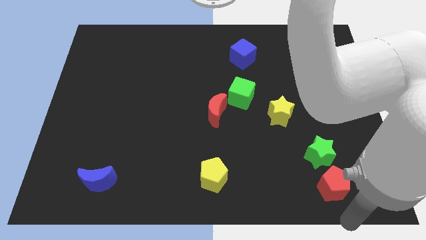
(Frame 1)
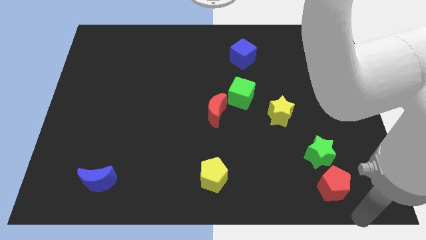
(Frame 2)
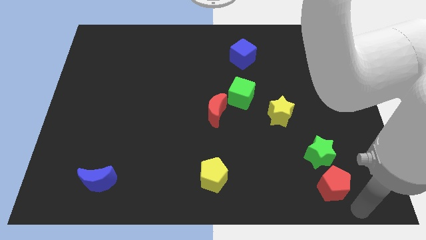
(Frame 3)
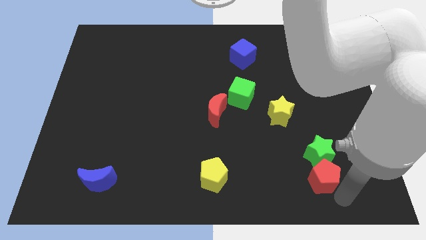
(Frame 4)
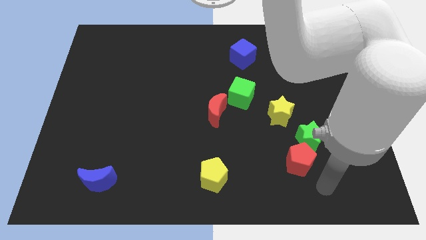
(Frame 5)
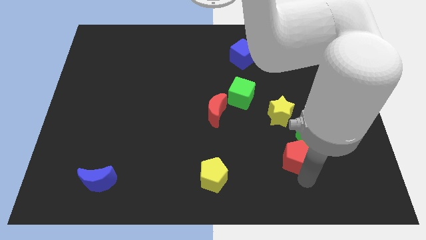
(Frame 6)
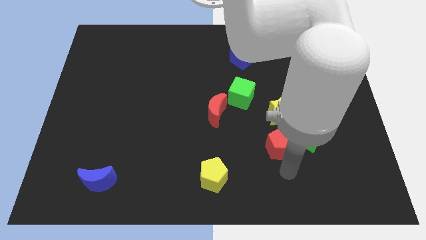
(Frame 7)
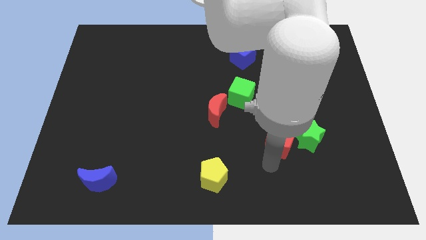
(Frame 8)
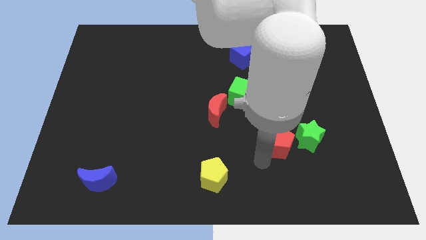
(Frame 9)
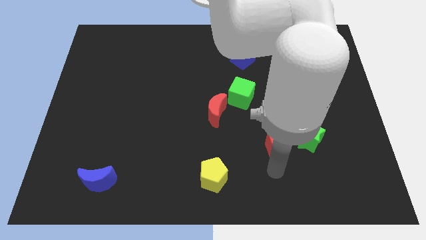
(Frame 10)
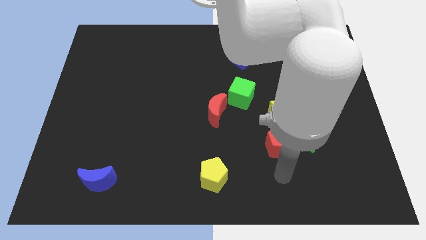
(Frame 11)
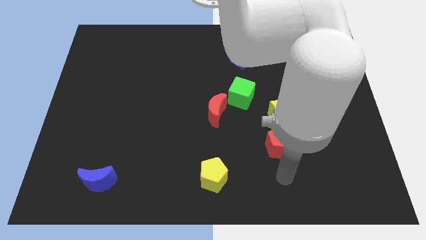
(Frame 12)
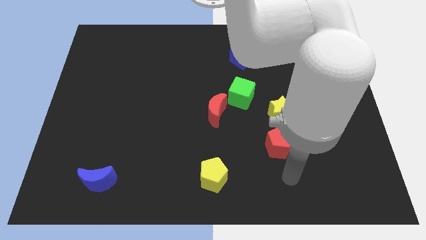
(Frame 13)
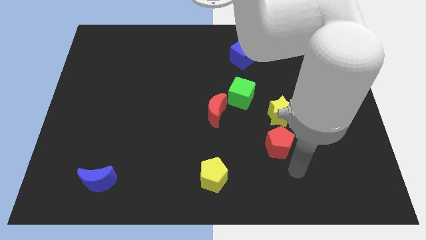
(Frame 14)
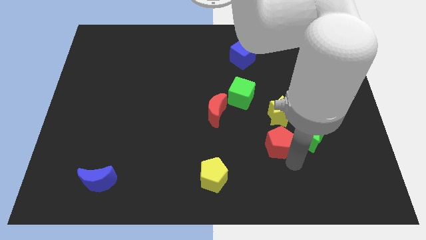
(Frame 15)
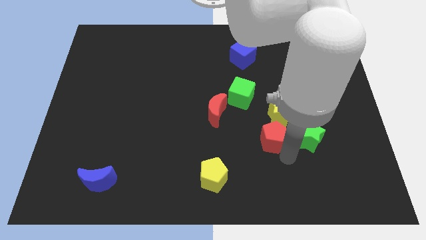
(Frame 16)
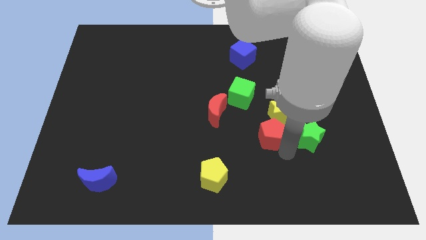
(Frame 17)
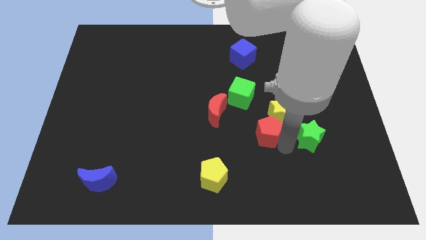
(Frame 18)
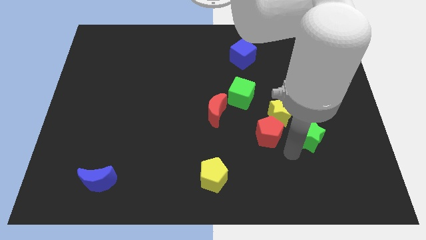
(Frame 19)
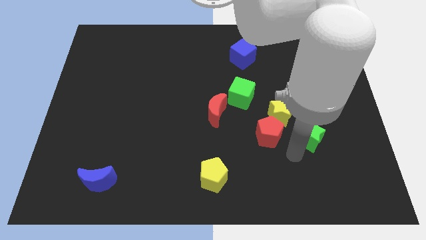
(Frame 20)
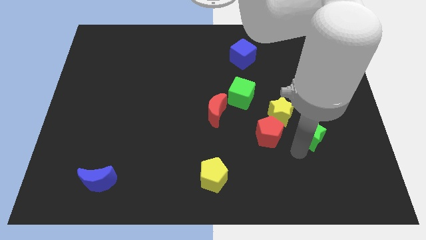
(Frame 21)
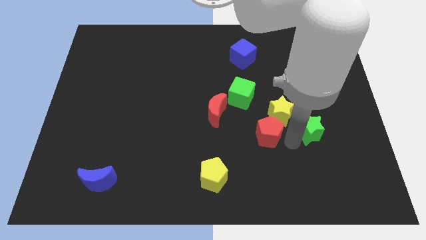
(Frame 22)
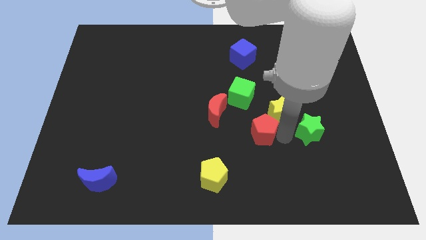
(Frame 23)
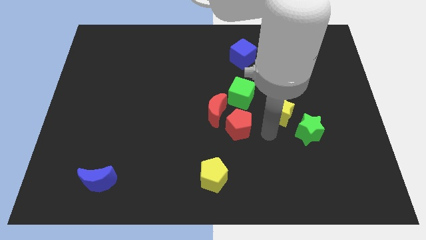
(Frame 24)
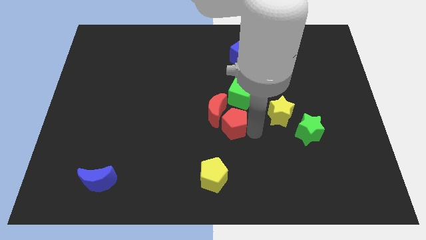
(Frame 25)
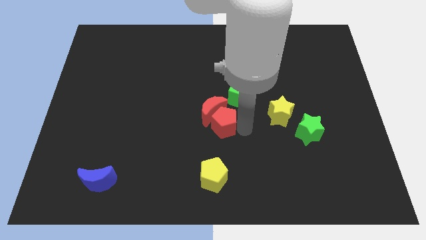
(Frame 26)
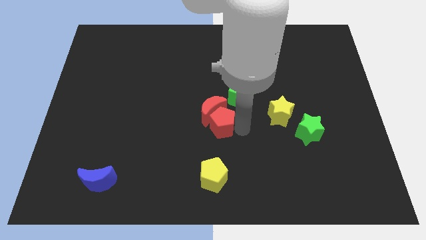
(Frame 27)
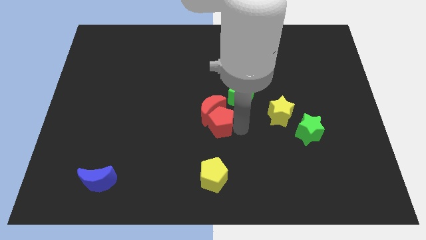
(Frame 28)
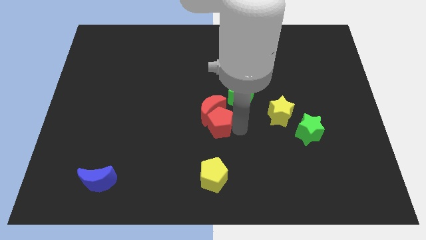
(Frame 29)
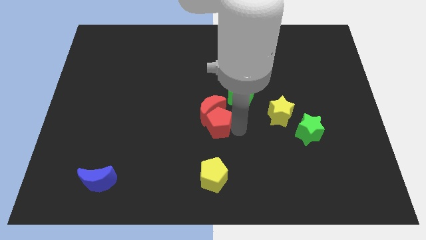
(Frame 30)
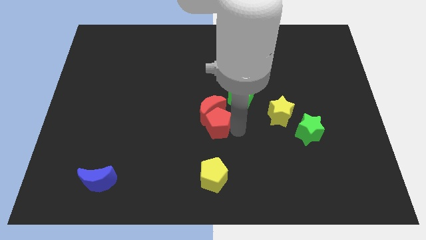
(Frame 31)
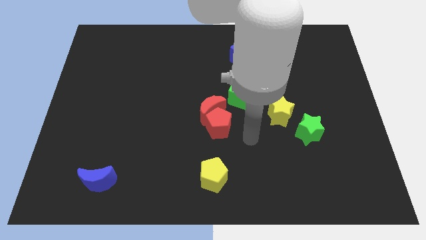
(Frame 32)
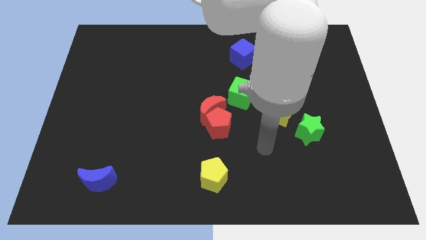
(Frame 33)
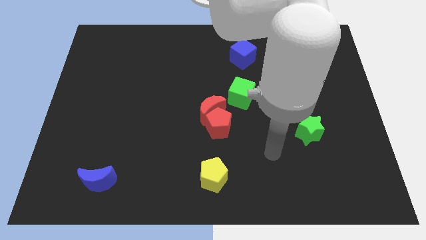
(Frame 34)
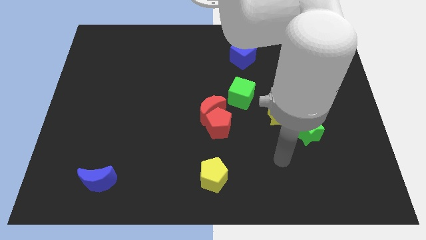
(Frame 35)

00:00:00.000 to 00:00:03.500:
push the red pentagon into the red moon

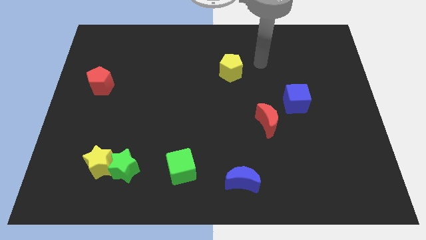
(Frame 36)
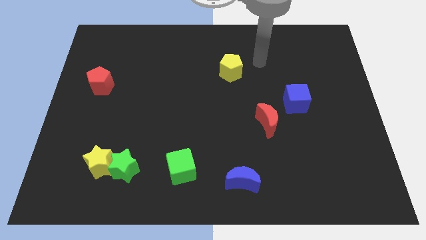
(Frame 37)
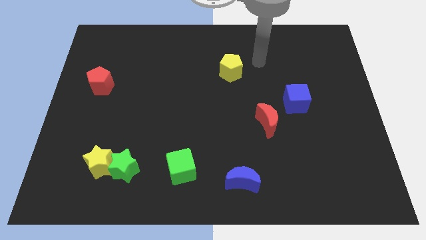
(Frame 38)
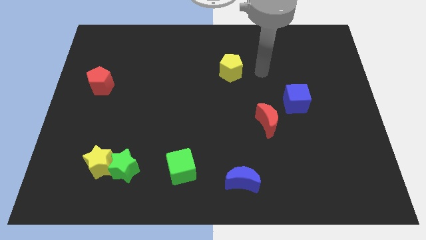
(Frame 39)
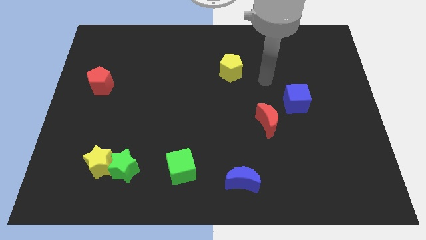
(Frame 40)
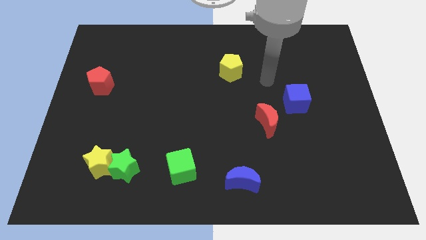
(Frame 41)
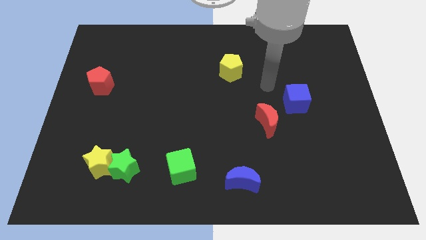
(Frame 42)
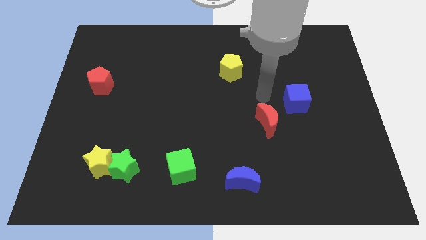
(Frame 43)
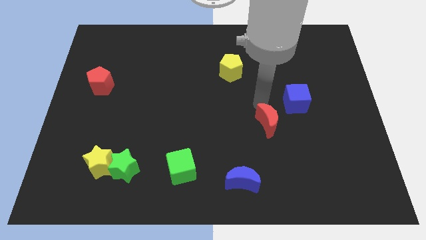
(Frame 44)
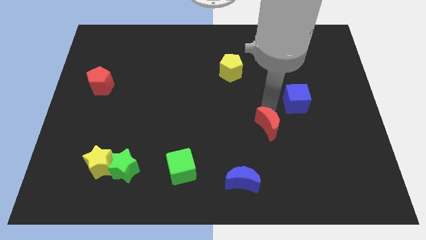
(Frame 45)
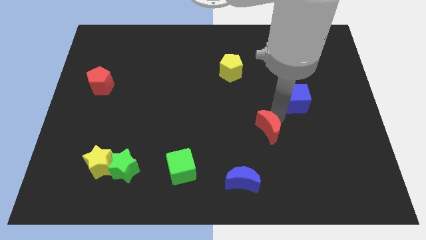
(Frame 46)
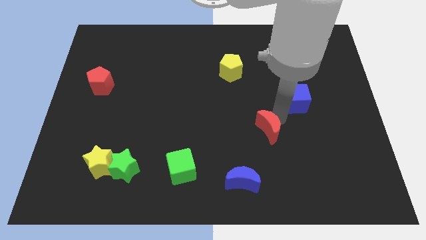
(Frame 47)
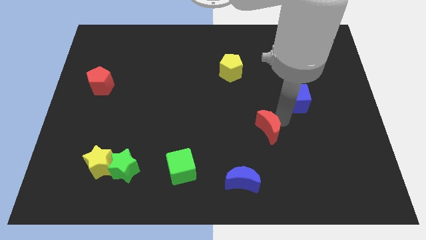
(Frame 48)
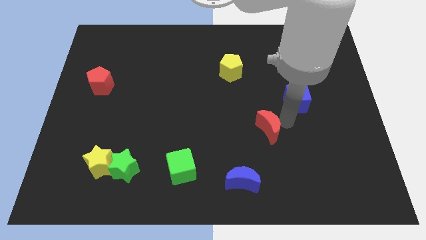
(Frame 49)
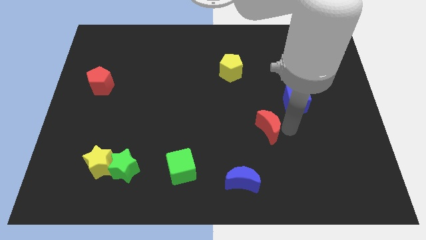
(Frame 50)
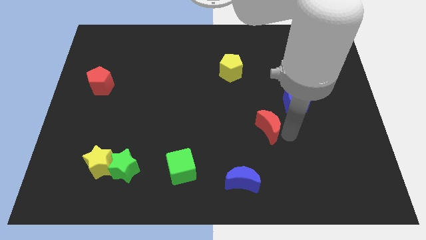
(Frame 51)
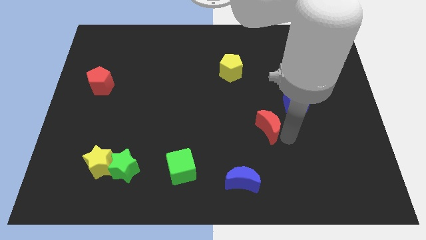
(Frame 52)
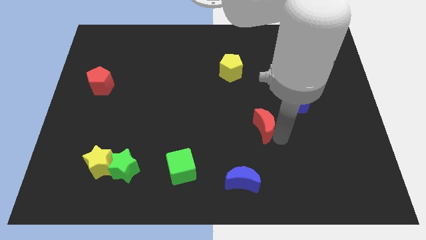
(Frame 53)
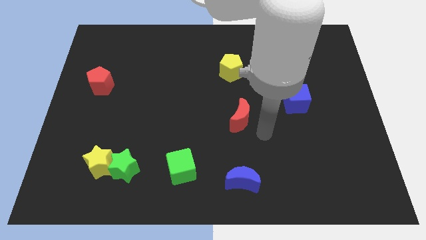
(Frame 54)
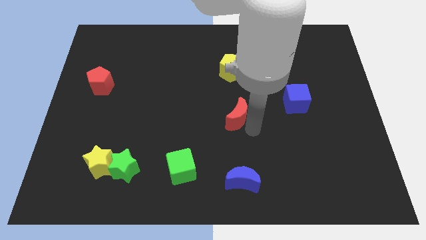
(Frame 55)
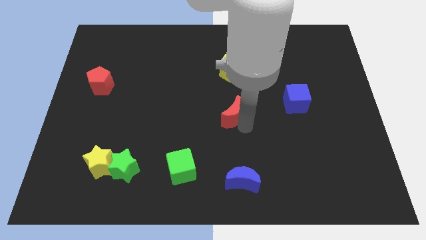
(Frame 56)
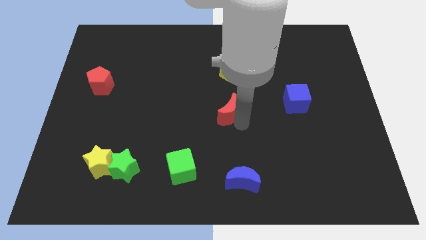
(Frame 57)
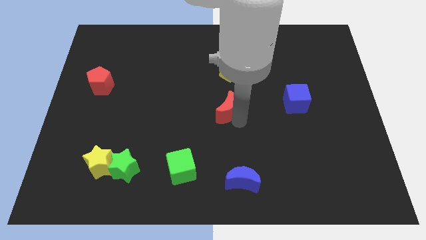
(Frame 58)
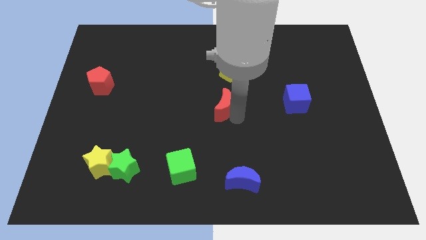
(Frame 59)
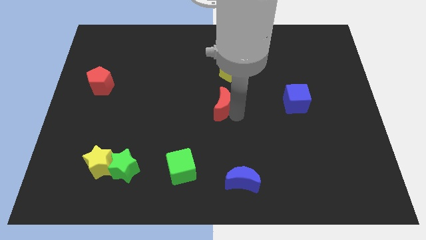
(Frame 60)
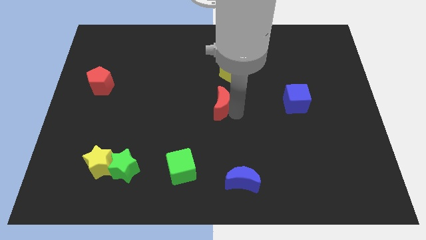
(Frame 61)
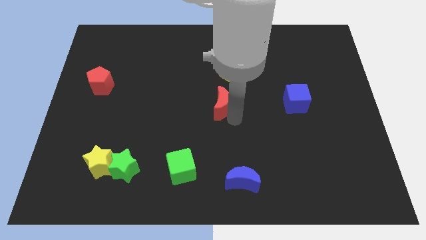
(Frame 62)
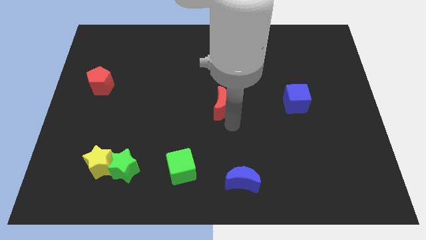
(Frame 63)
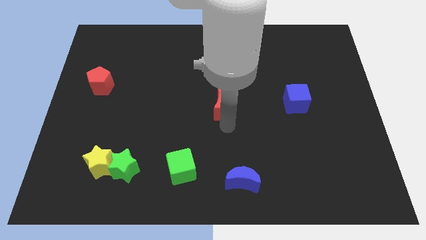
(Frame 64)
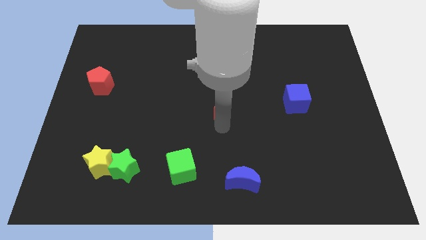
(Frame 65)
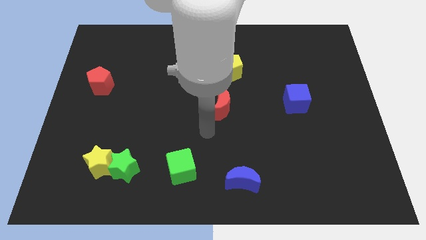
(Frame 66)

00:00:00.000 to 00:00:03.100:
place the red crescent below to the yellow pentagon

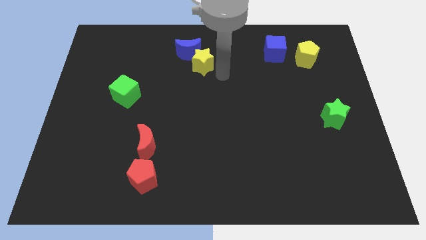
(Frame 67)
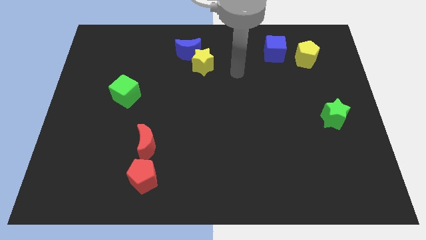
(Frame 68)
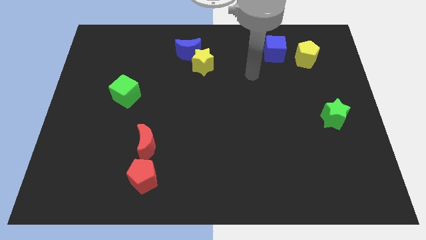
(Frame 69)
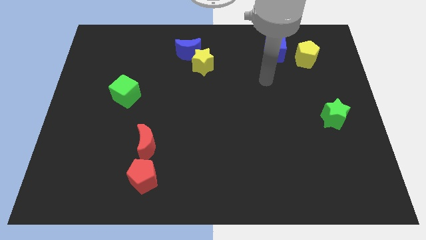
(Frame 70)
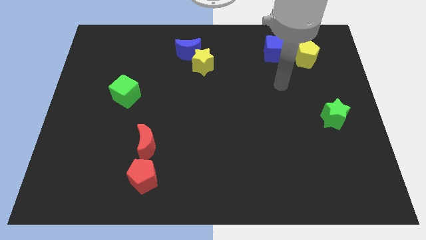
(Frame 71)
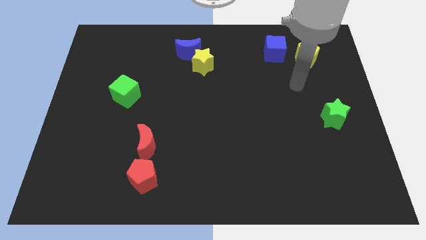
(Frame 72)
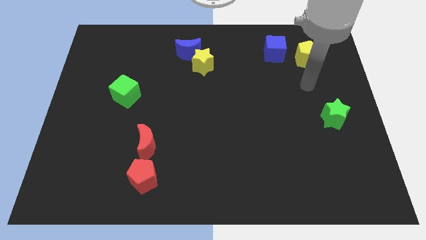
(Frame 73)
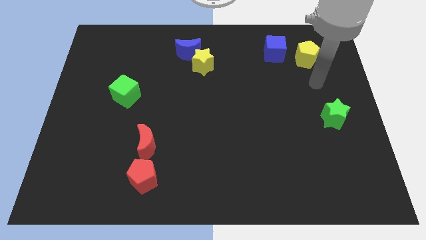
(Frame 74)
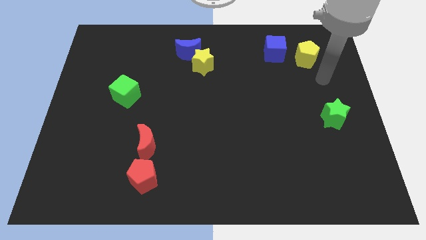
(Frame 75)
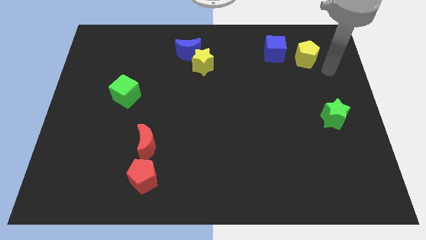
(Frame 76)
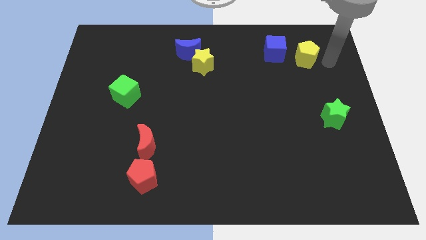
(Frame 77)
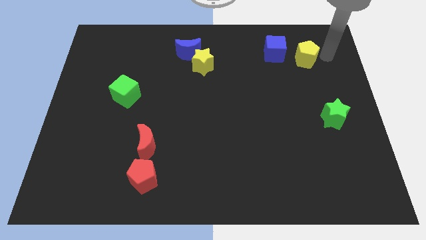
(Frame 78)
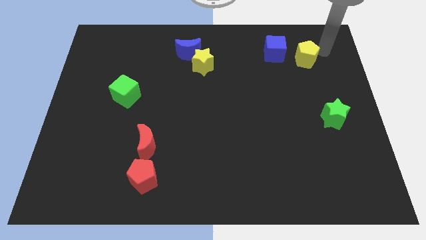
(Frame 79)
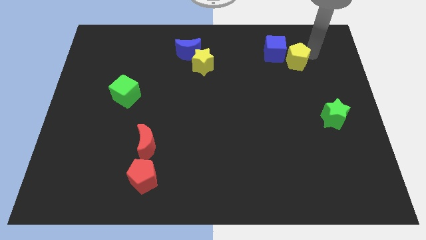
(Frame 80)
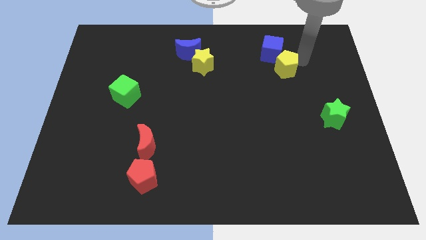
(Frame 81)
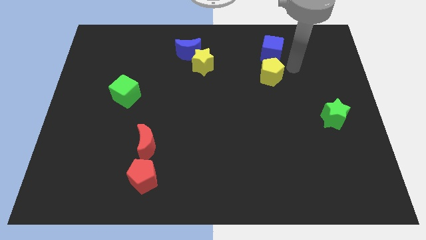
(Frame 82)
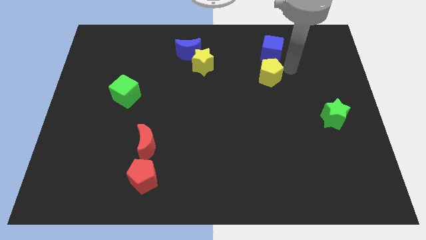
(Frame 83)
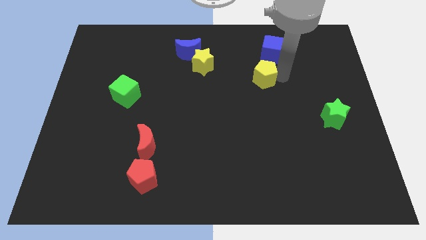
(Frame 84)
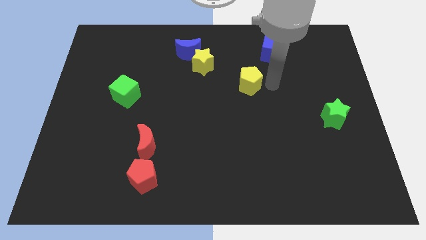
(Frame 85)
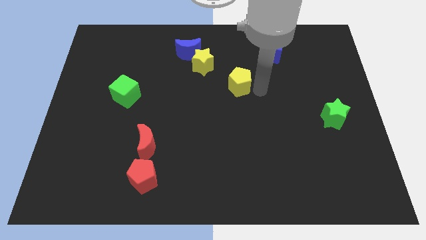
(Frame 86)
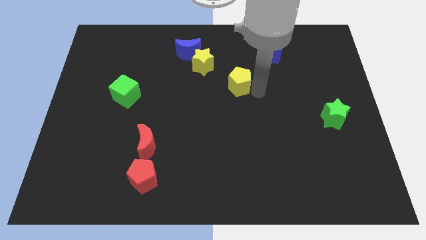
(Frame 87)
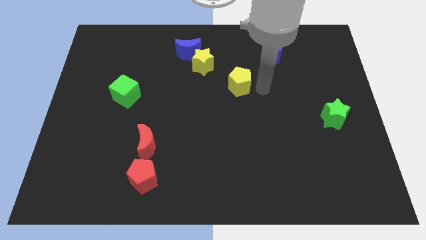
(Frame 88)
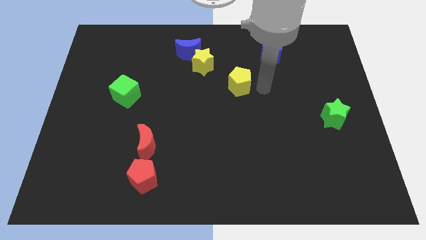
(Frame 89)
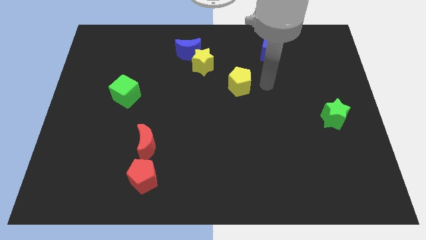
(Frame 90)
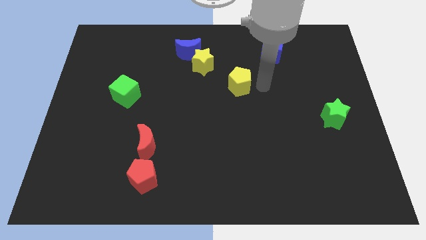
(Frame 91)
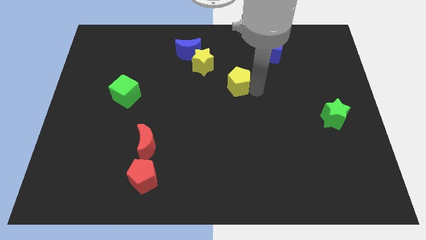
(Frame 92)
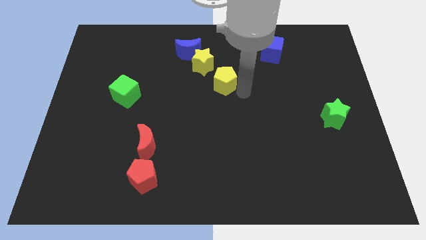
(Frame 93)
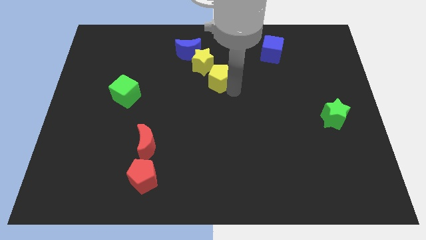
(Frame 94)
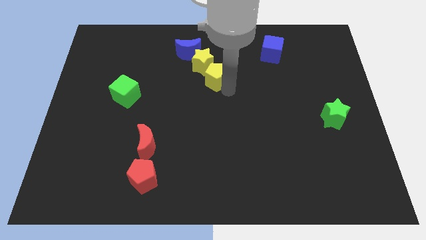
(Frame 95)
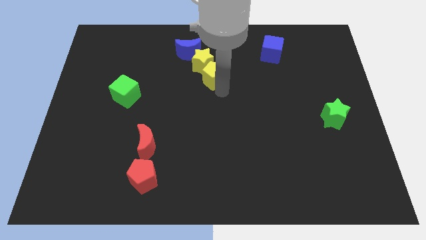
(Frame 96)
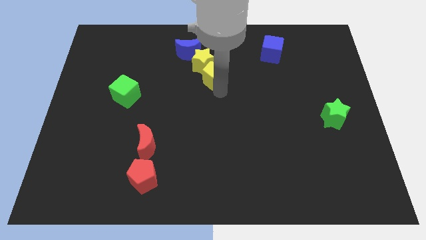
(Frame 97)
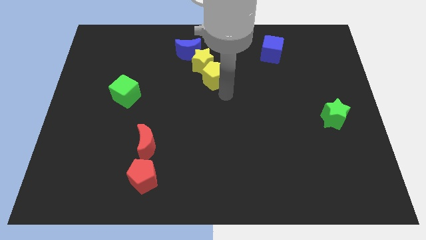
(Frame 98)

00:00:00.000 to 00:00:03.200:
push the yellow pentagon below the yellow star
